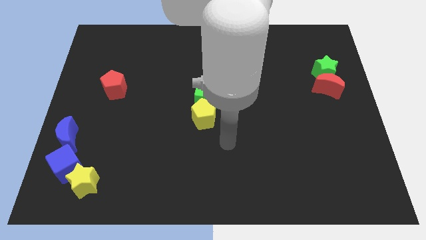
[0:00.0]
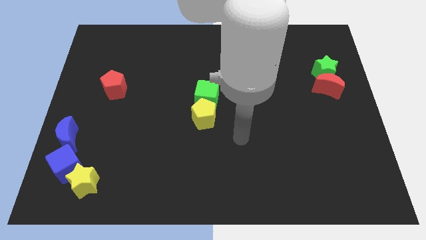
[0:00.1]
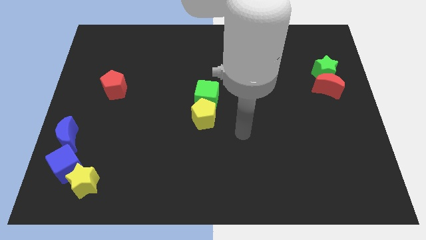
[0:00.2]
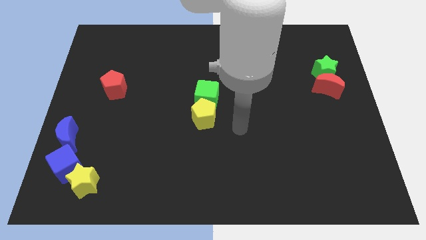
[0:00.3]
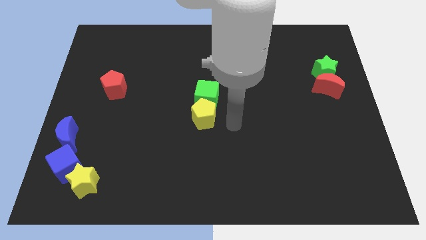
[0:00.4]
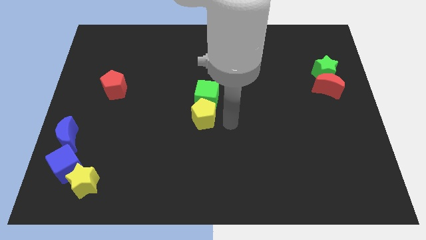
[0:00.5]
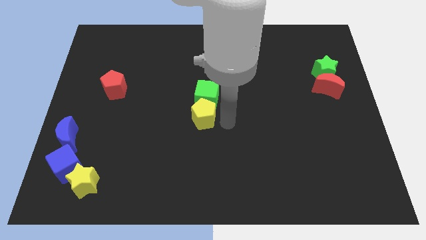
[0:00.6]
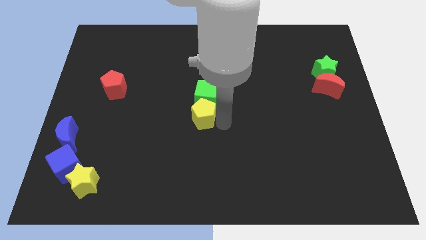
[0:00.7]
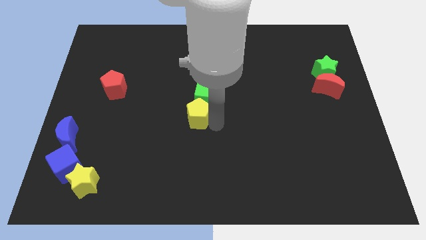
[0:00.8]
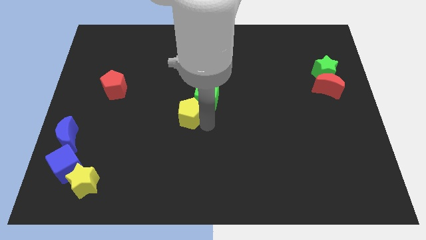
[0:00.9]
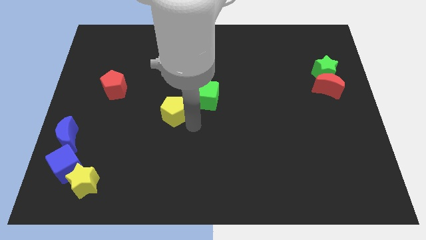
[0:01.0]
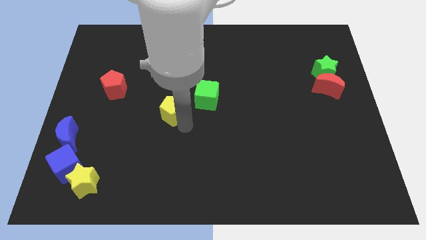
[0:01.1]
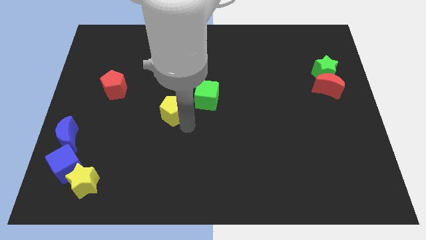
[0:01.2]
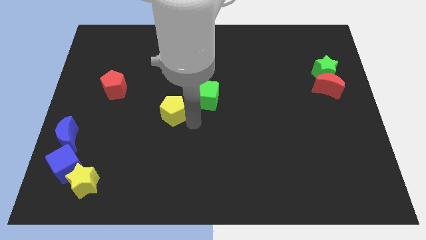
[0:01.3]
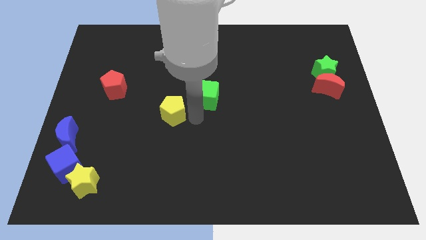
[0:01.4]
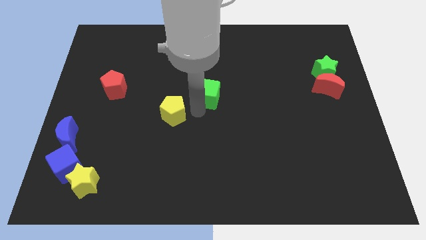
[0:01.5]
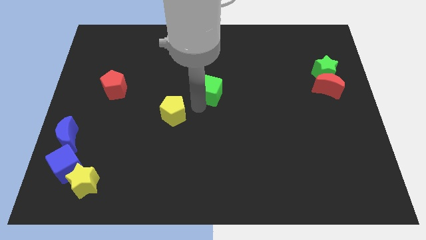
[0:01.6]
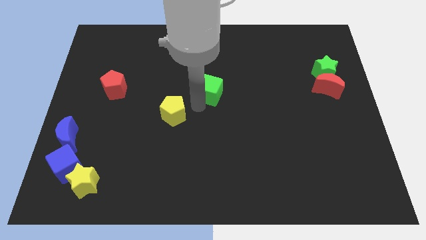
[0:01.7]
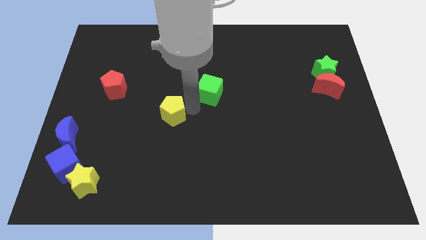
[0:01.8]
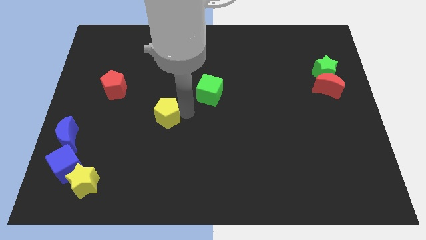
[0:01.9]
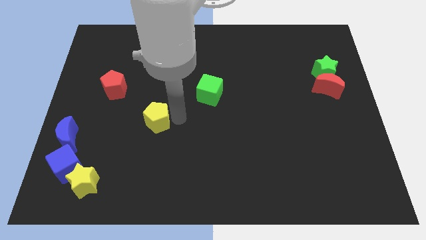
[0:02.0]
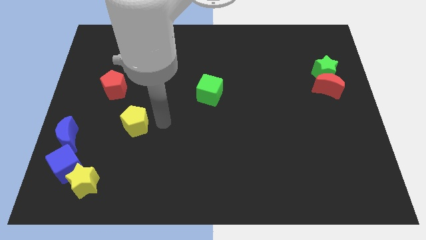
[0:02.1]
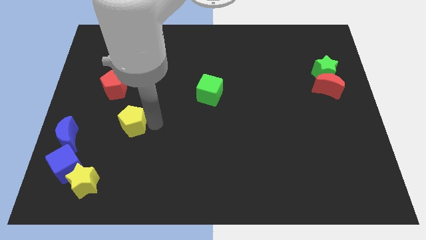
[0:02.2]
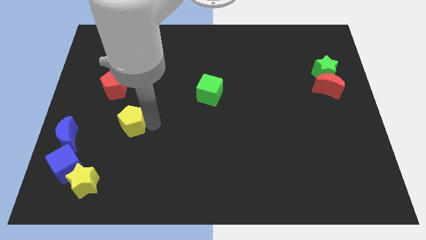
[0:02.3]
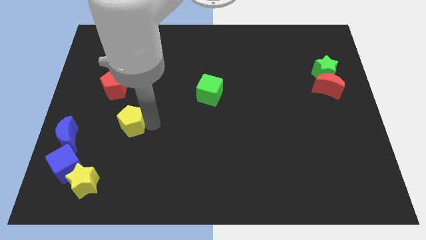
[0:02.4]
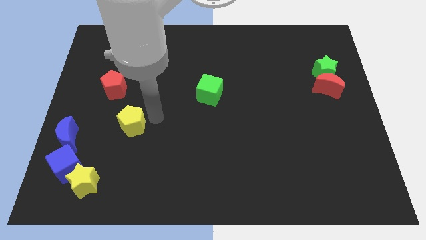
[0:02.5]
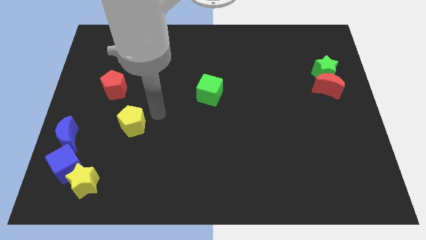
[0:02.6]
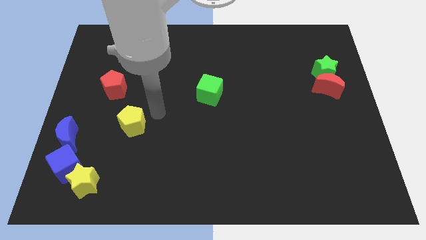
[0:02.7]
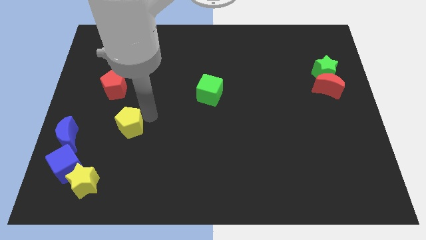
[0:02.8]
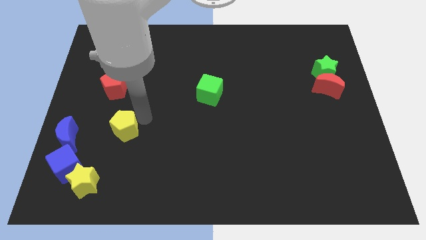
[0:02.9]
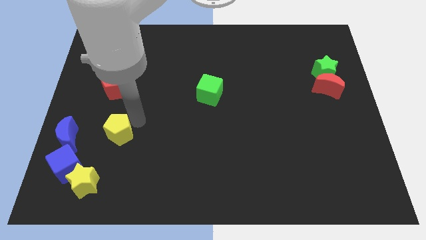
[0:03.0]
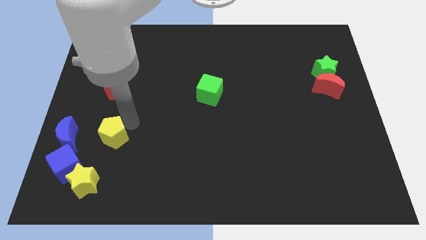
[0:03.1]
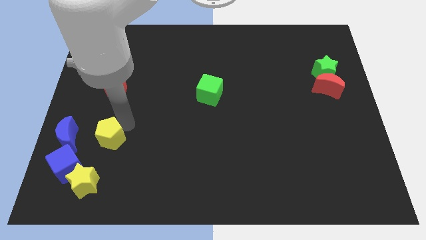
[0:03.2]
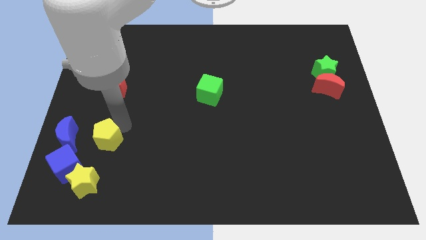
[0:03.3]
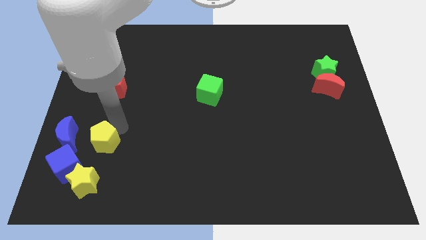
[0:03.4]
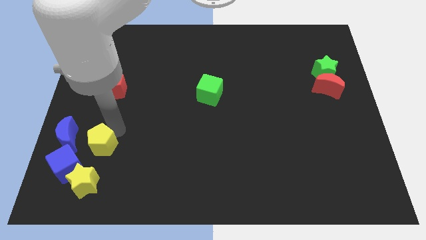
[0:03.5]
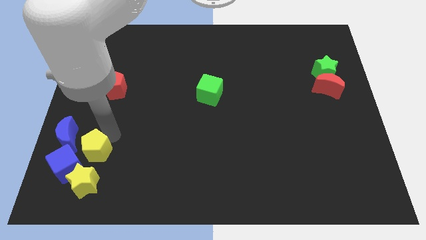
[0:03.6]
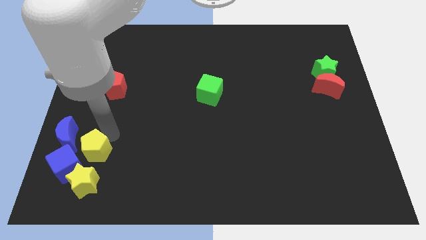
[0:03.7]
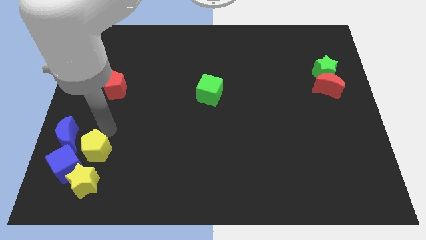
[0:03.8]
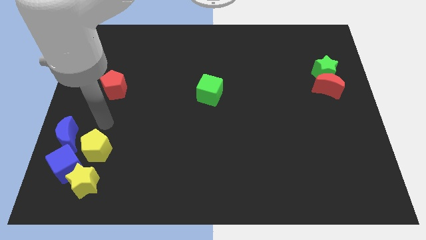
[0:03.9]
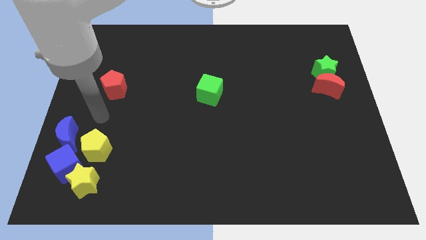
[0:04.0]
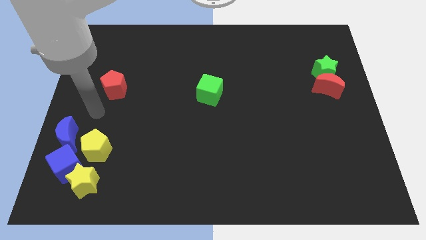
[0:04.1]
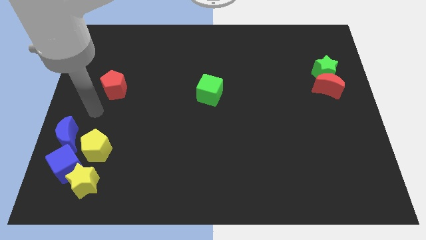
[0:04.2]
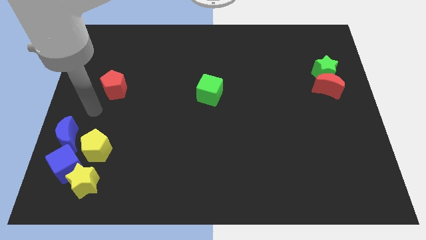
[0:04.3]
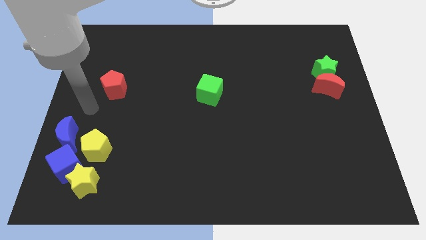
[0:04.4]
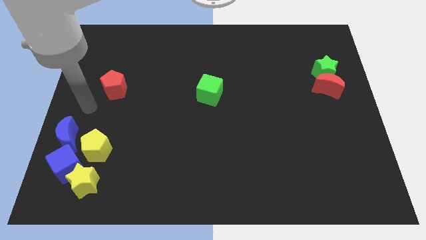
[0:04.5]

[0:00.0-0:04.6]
move the yellow pentagon above the yellow star

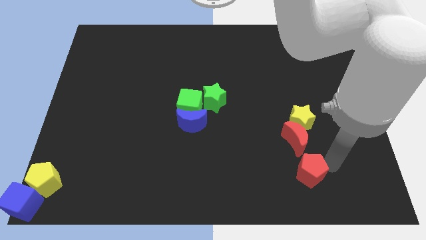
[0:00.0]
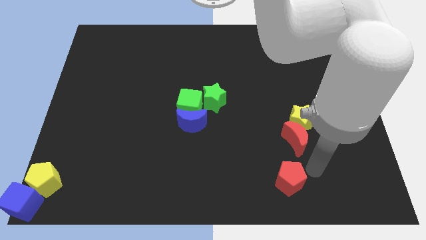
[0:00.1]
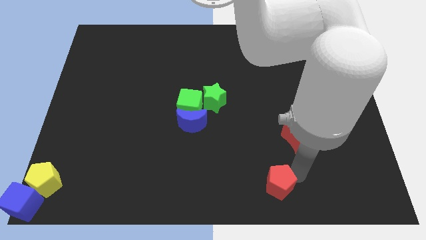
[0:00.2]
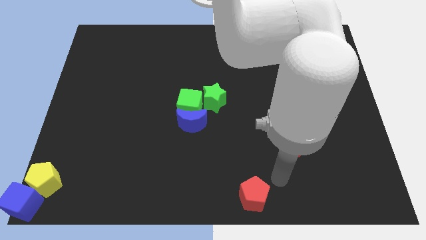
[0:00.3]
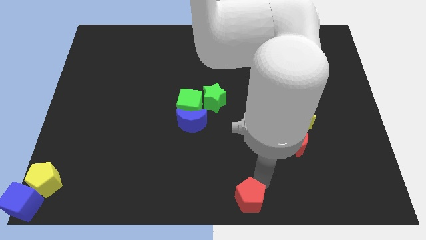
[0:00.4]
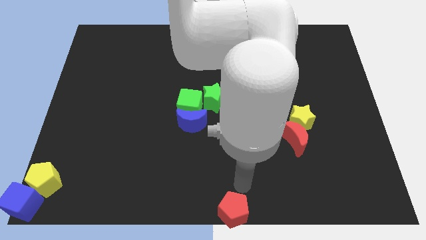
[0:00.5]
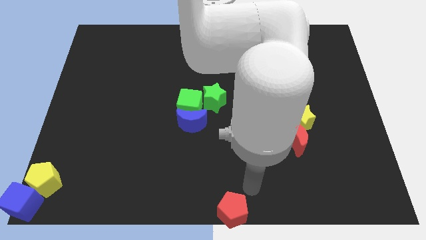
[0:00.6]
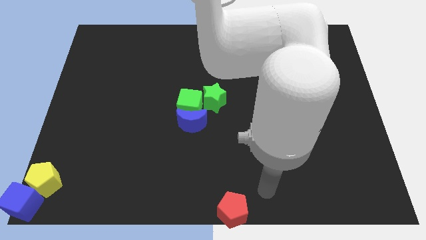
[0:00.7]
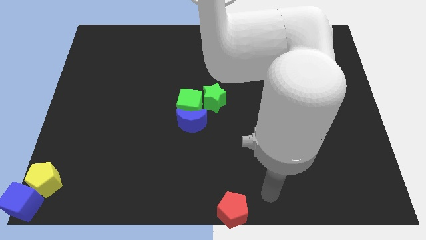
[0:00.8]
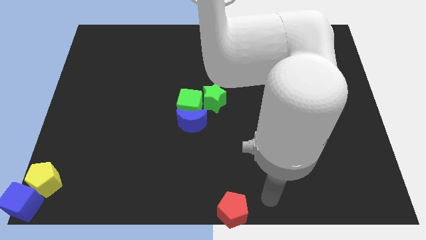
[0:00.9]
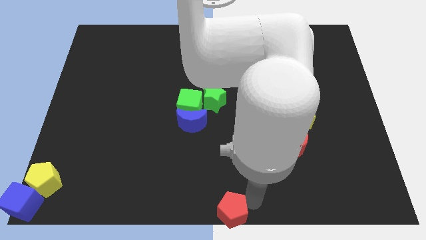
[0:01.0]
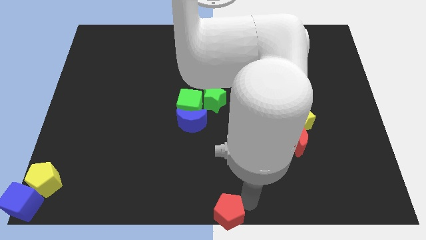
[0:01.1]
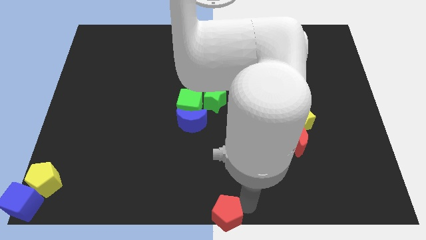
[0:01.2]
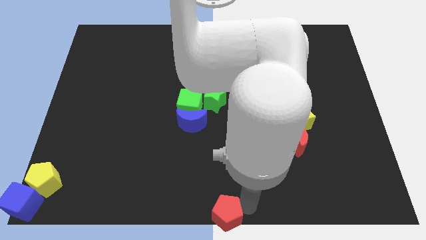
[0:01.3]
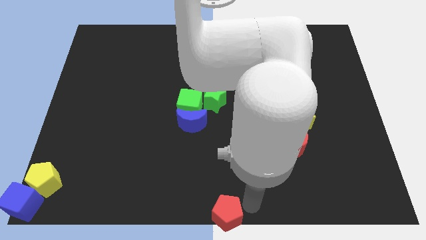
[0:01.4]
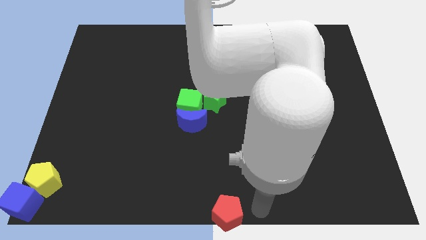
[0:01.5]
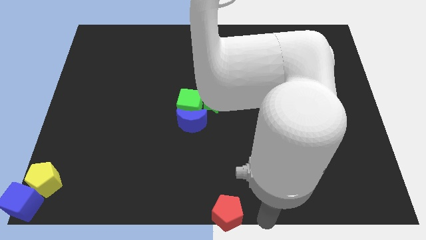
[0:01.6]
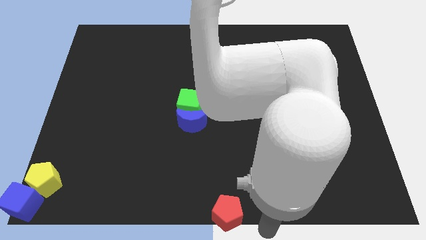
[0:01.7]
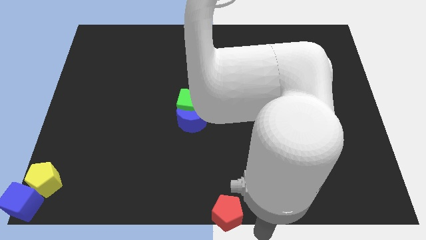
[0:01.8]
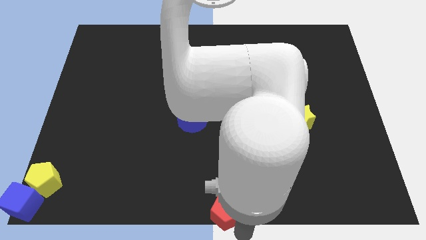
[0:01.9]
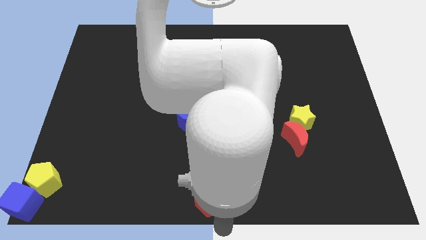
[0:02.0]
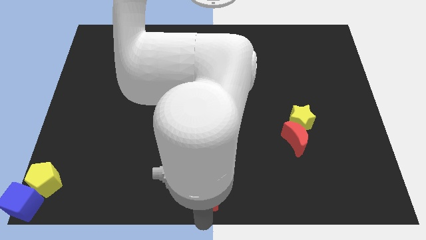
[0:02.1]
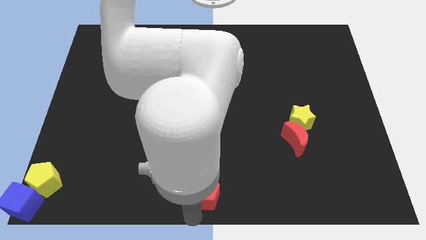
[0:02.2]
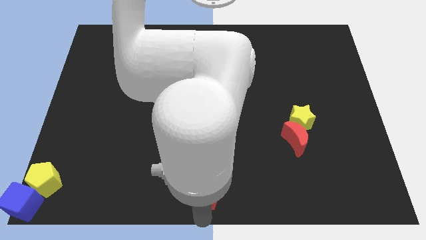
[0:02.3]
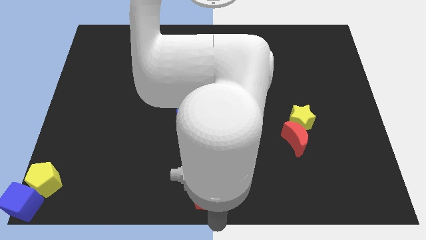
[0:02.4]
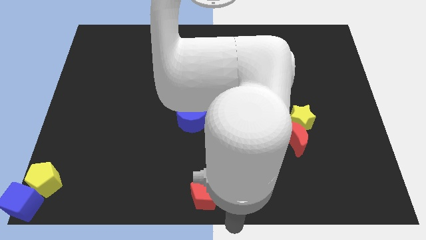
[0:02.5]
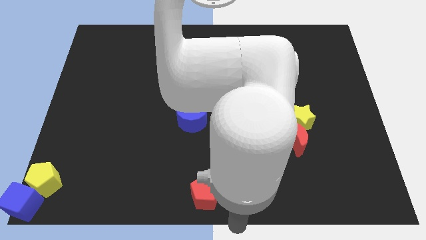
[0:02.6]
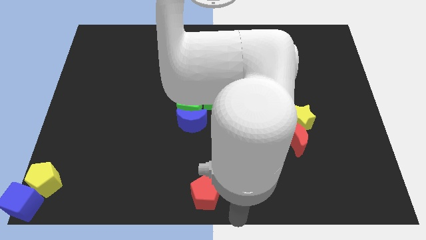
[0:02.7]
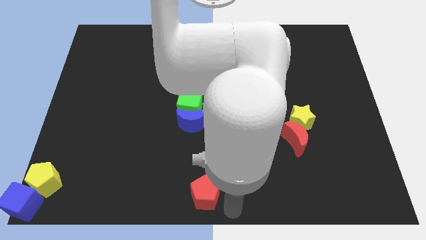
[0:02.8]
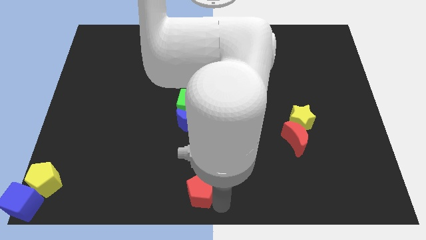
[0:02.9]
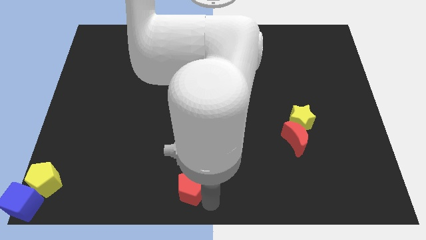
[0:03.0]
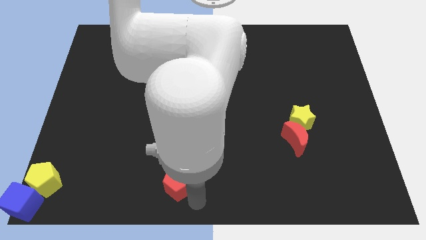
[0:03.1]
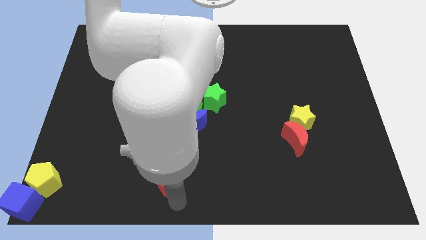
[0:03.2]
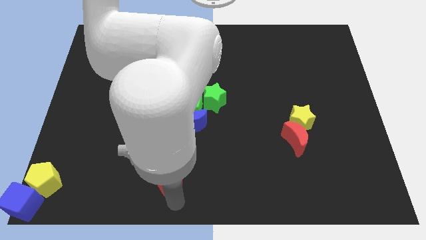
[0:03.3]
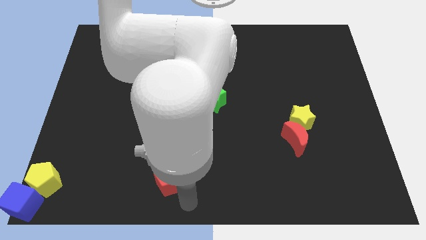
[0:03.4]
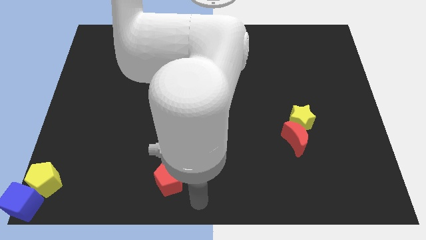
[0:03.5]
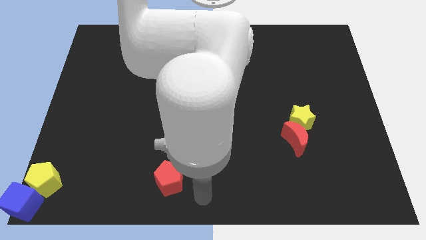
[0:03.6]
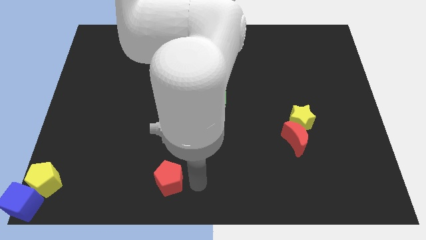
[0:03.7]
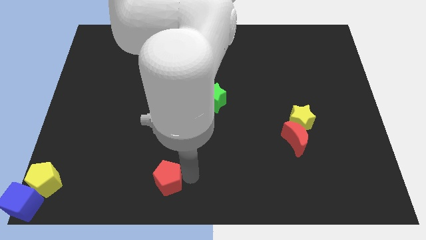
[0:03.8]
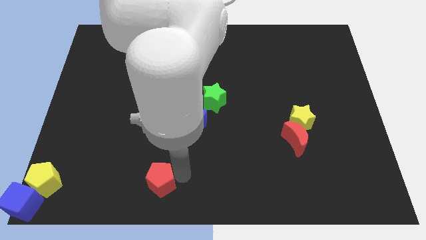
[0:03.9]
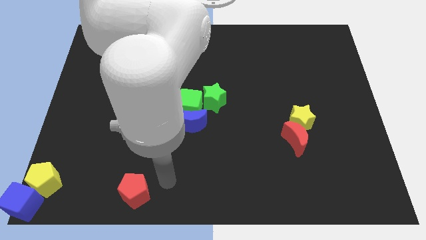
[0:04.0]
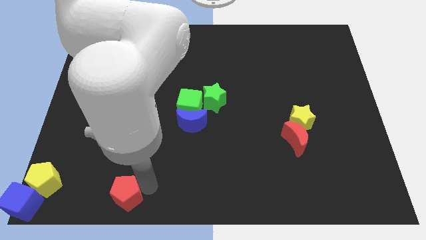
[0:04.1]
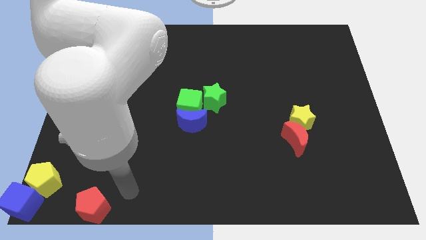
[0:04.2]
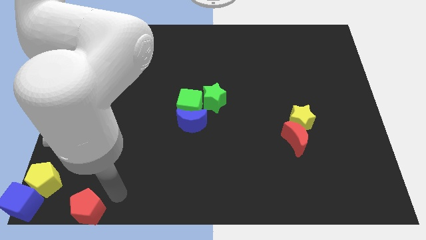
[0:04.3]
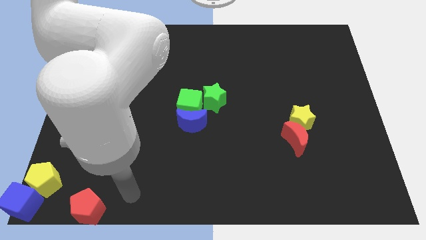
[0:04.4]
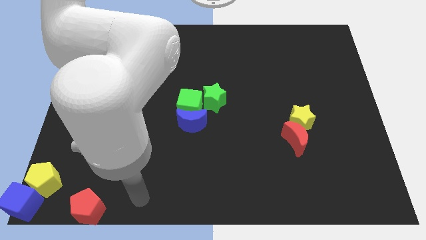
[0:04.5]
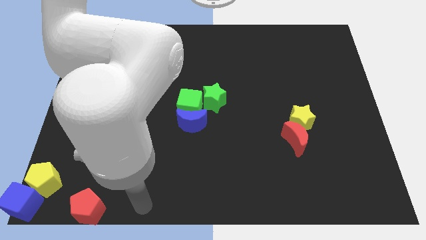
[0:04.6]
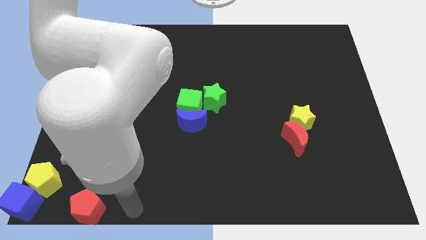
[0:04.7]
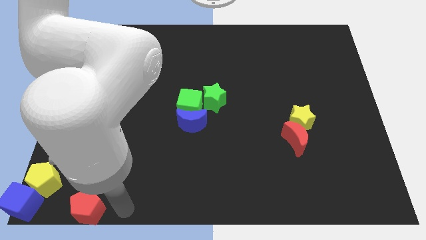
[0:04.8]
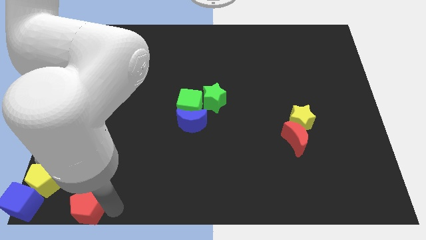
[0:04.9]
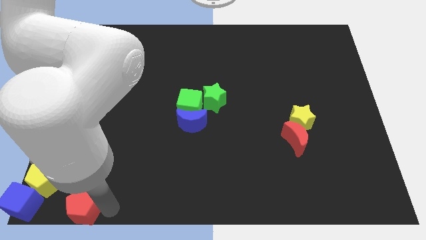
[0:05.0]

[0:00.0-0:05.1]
slide red pentagon towards blue cube
